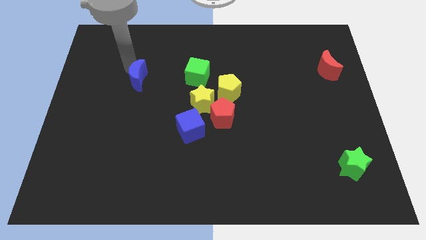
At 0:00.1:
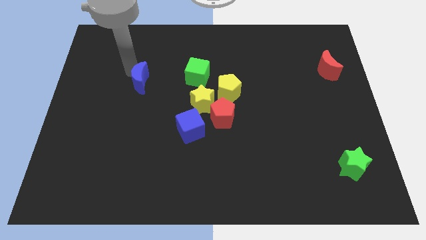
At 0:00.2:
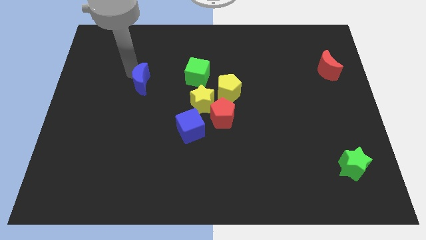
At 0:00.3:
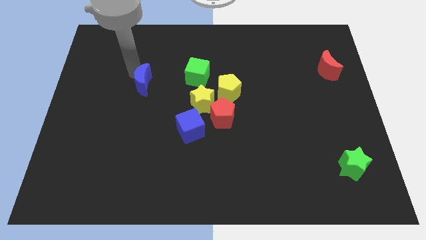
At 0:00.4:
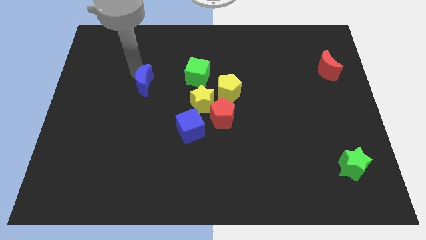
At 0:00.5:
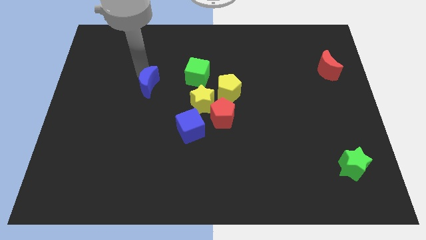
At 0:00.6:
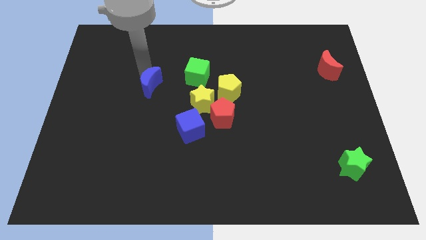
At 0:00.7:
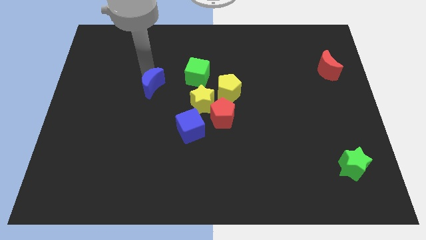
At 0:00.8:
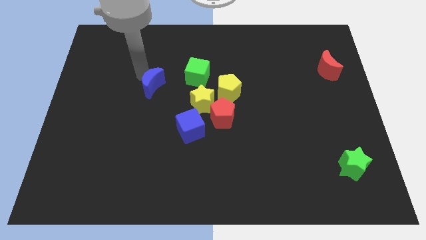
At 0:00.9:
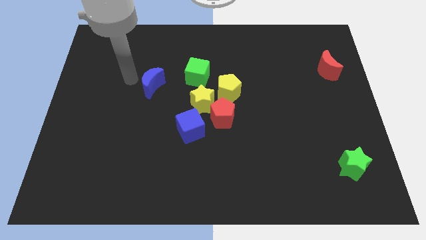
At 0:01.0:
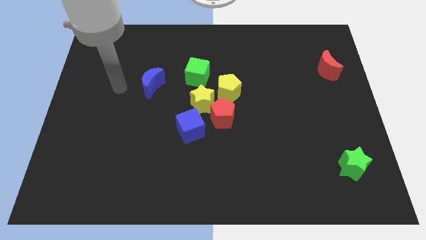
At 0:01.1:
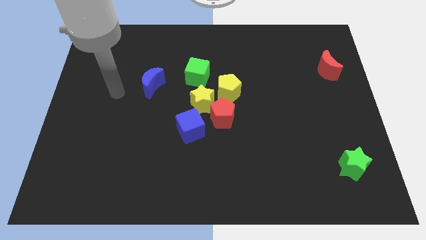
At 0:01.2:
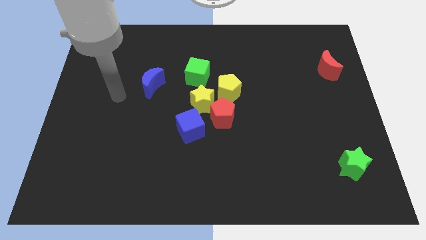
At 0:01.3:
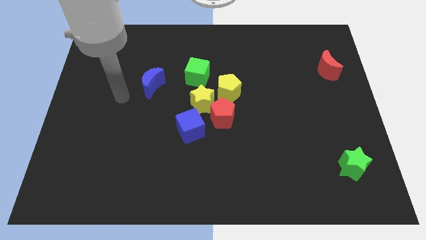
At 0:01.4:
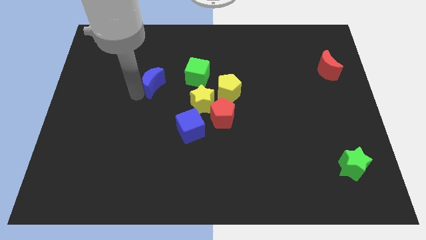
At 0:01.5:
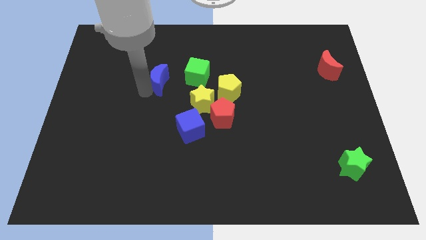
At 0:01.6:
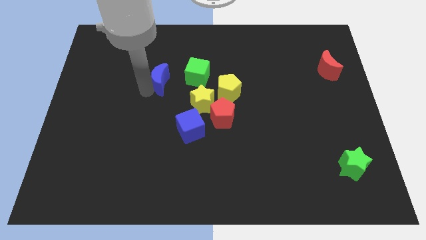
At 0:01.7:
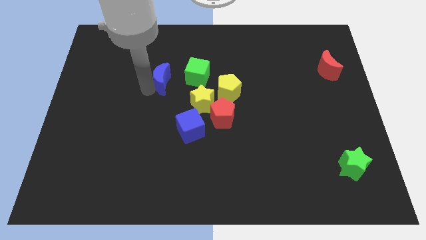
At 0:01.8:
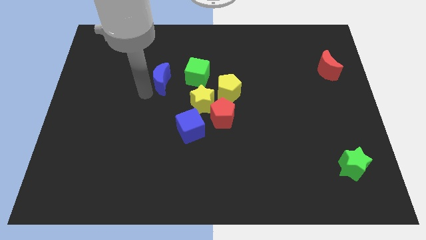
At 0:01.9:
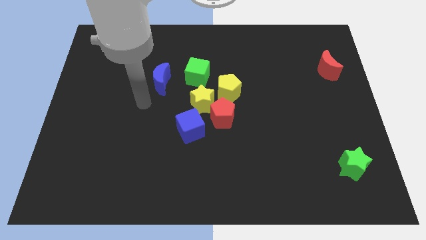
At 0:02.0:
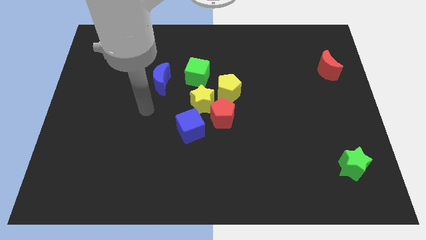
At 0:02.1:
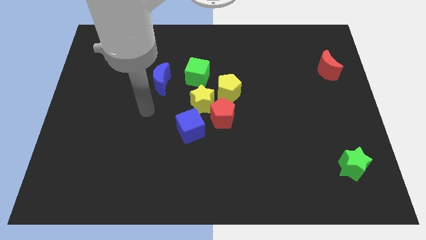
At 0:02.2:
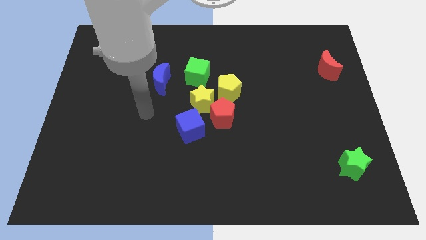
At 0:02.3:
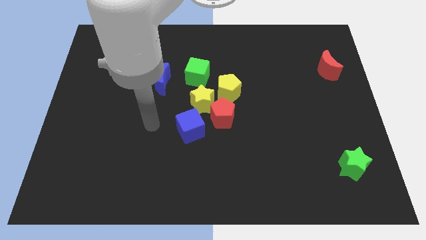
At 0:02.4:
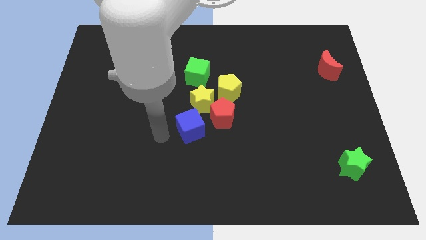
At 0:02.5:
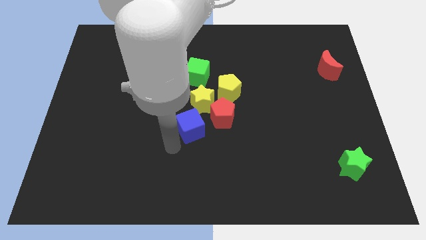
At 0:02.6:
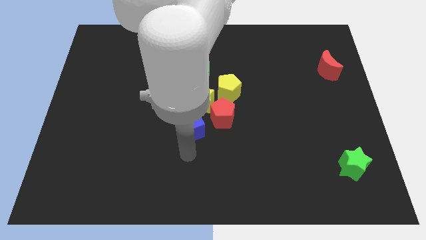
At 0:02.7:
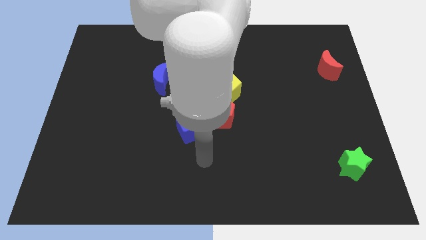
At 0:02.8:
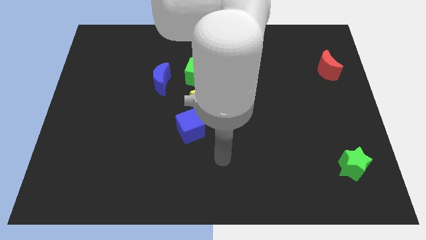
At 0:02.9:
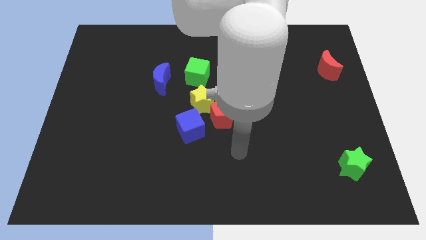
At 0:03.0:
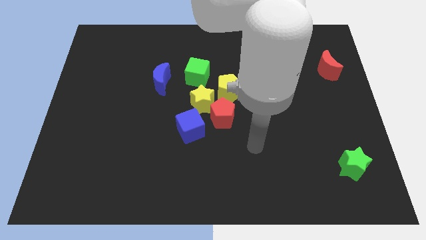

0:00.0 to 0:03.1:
move blue crescent parallel left to green cube

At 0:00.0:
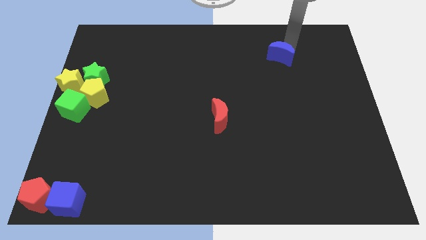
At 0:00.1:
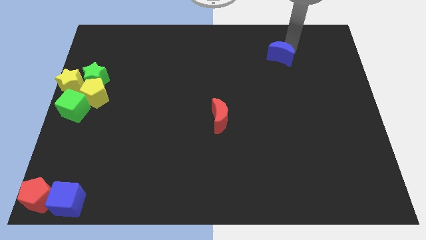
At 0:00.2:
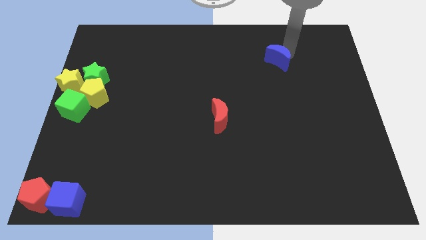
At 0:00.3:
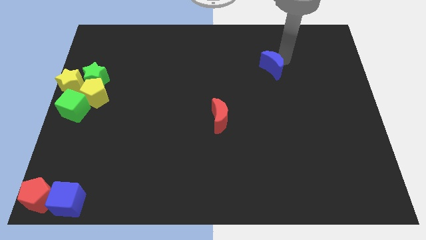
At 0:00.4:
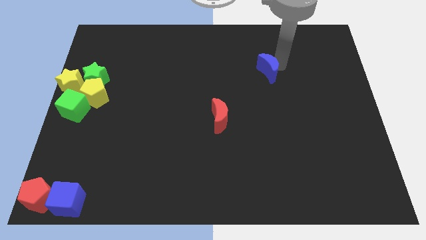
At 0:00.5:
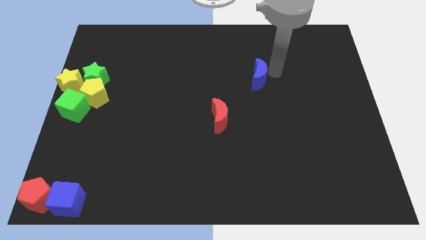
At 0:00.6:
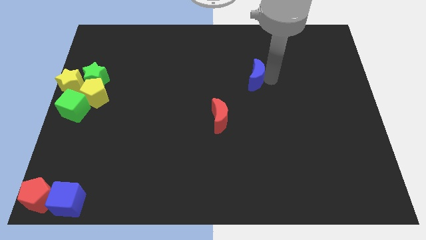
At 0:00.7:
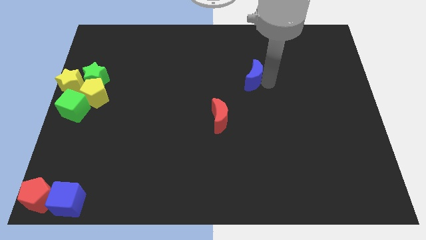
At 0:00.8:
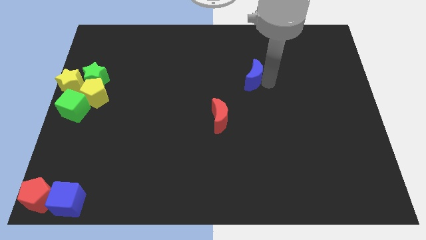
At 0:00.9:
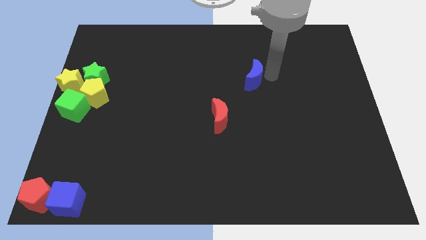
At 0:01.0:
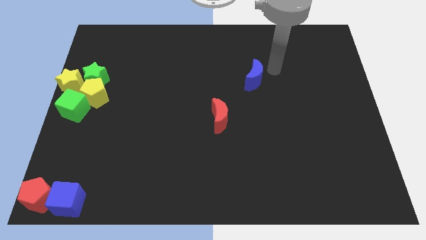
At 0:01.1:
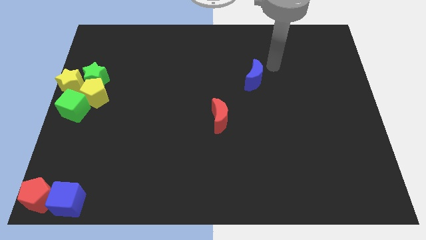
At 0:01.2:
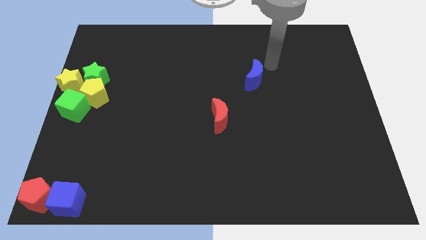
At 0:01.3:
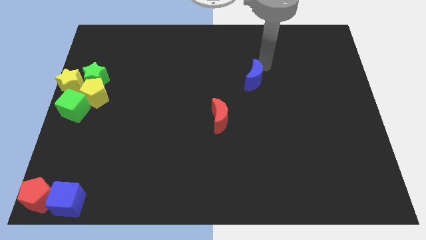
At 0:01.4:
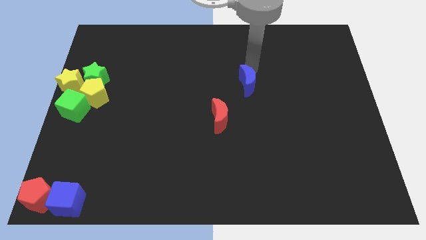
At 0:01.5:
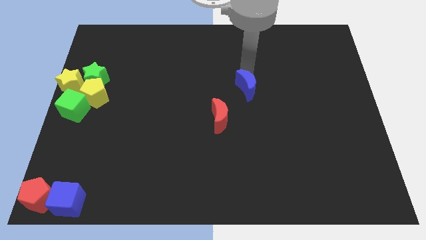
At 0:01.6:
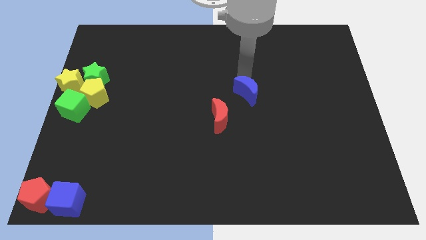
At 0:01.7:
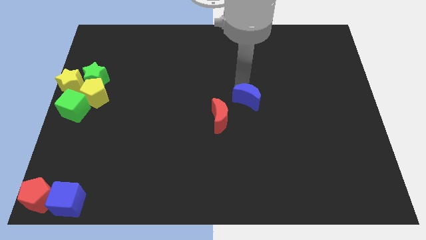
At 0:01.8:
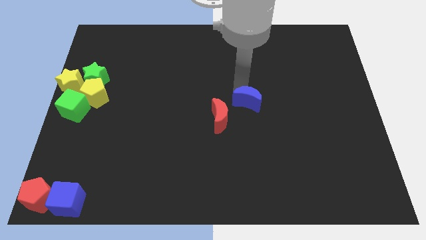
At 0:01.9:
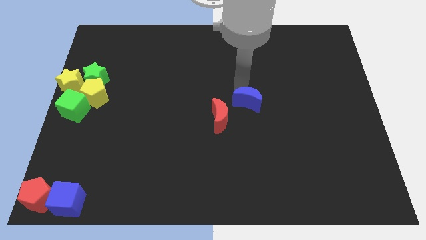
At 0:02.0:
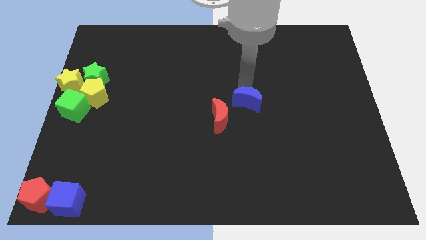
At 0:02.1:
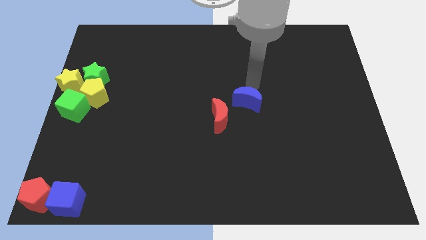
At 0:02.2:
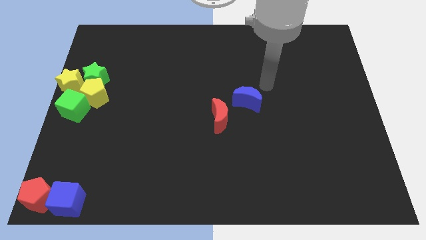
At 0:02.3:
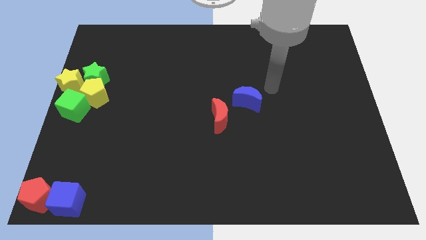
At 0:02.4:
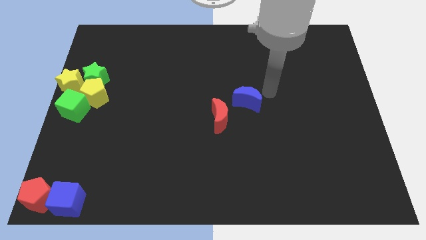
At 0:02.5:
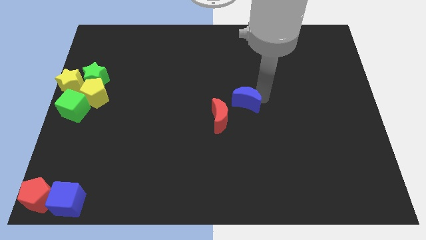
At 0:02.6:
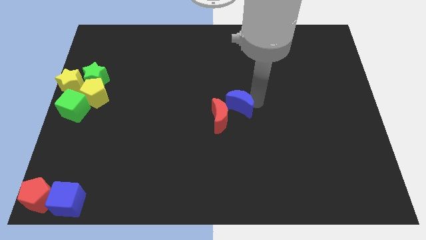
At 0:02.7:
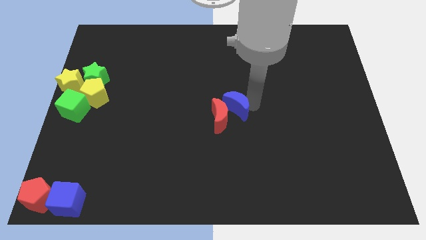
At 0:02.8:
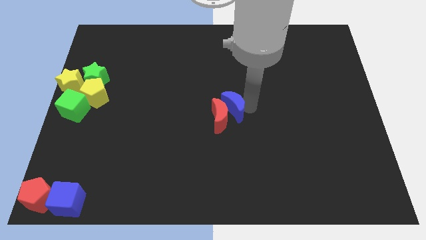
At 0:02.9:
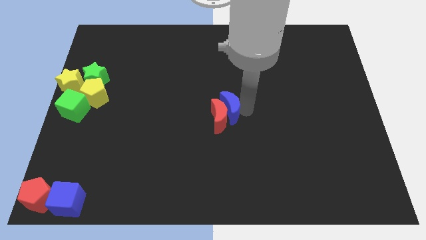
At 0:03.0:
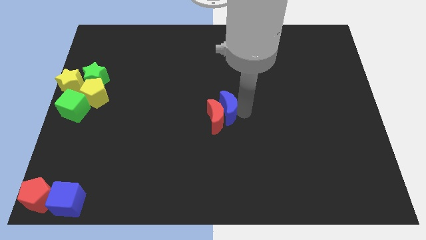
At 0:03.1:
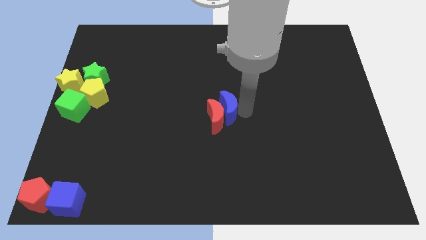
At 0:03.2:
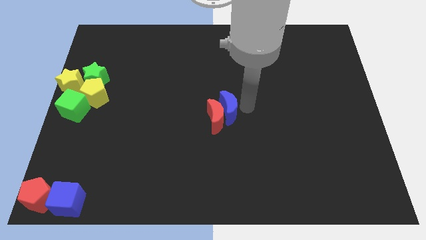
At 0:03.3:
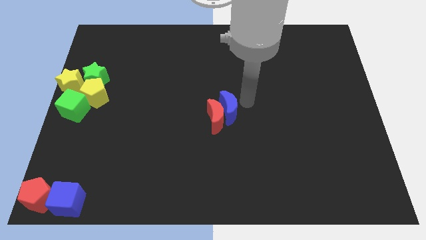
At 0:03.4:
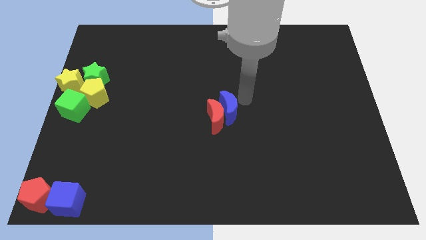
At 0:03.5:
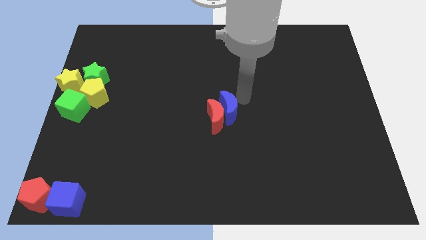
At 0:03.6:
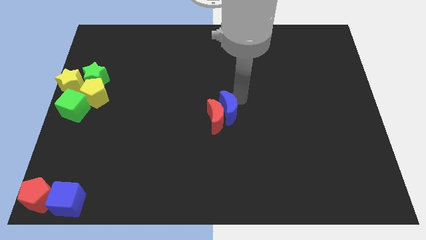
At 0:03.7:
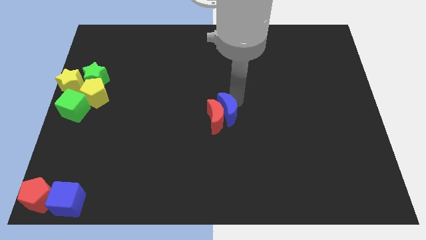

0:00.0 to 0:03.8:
push blue moon into red moon

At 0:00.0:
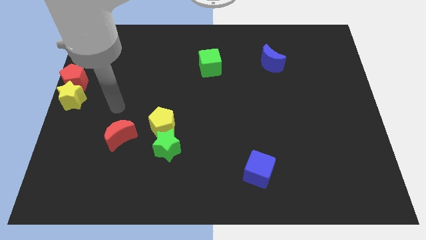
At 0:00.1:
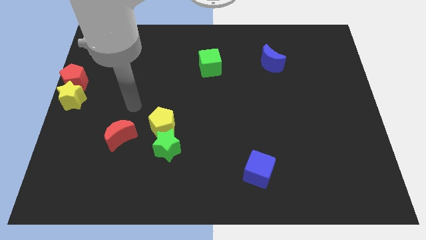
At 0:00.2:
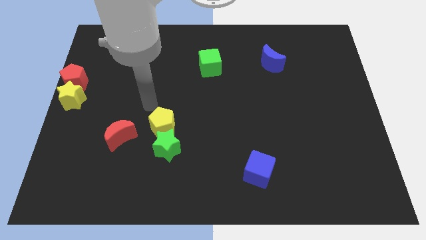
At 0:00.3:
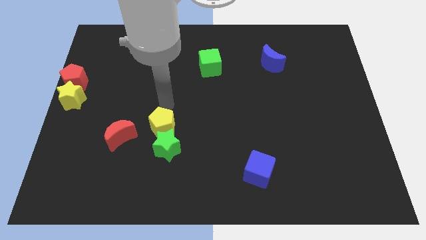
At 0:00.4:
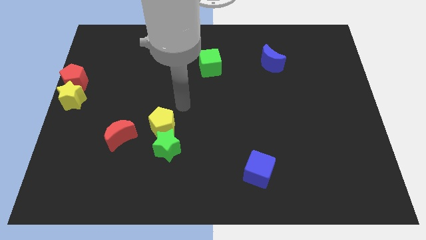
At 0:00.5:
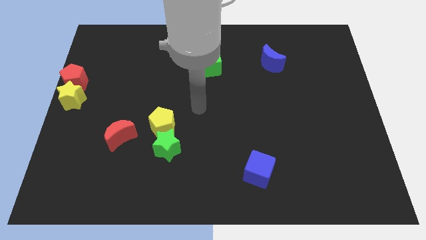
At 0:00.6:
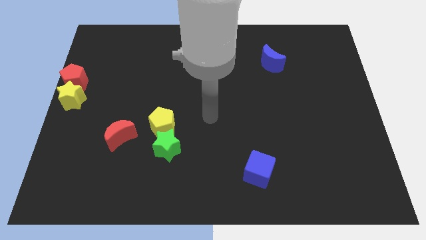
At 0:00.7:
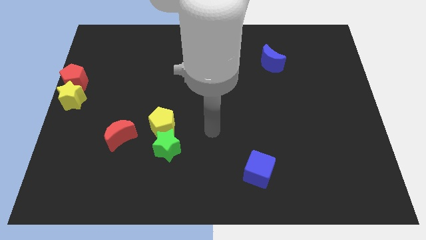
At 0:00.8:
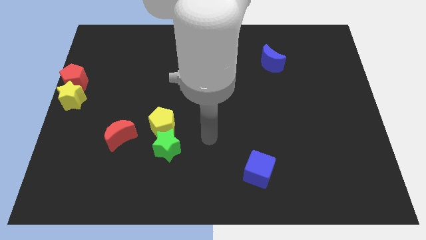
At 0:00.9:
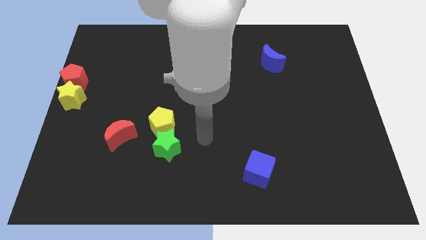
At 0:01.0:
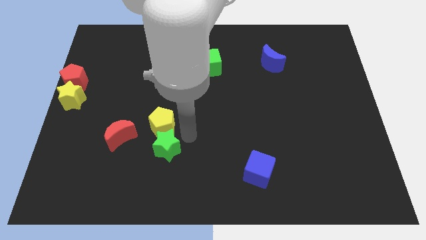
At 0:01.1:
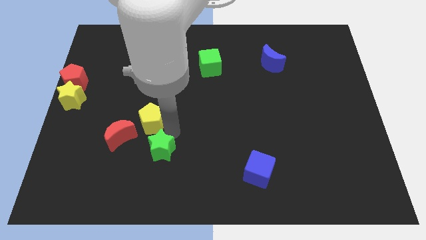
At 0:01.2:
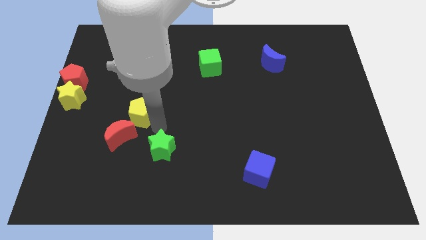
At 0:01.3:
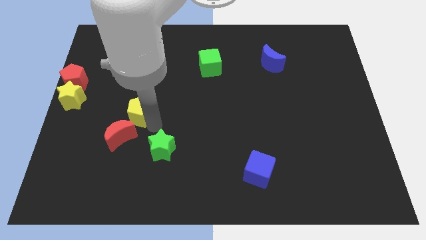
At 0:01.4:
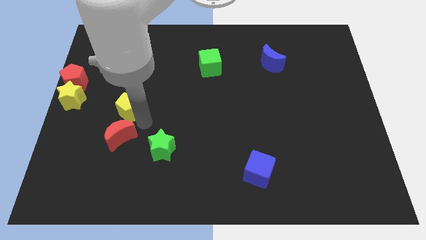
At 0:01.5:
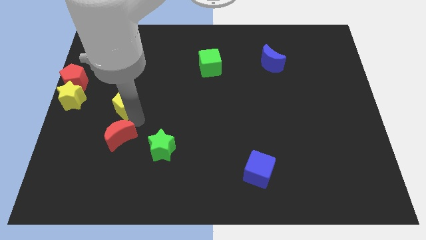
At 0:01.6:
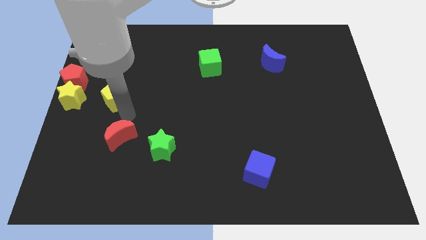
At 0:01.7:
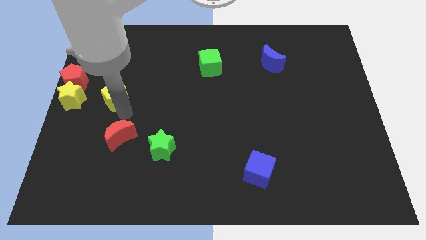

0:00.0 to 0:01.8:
separate the yellow pentagon and the green star

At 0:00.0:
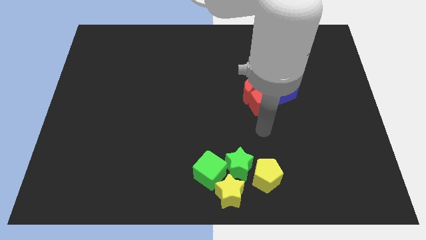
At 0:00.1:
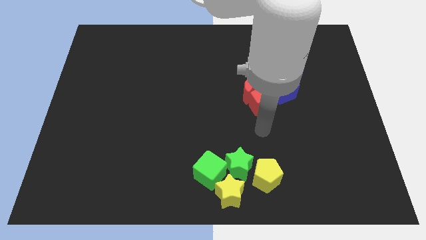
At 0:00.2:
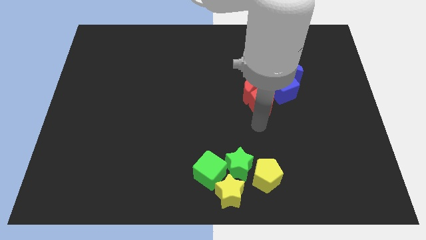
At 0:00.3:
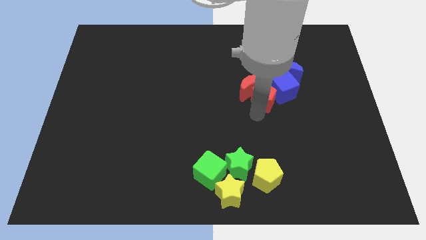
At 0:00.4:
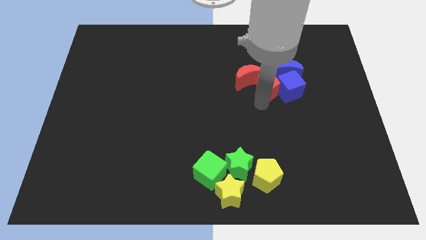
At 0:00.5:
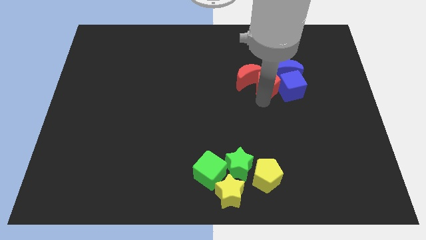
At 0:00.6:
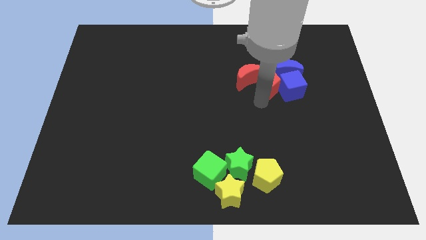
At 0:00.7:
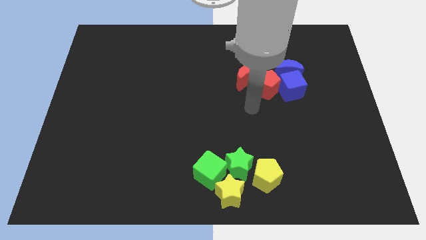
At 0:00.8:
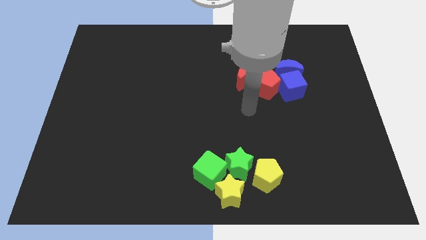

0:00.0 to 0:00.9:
move the red pentagon slightly right
